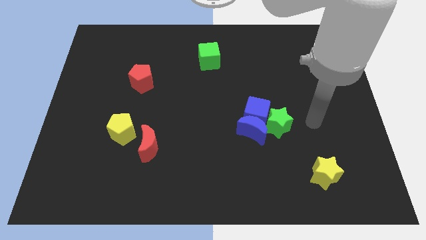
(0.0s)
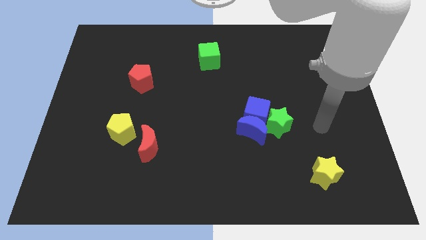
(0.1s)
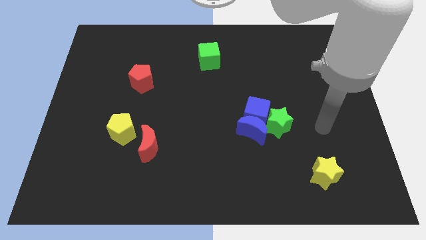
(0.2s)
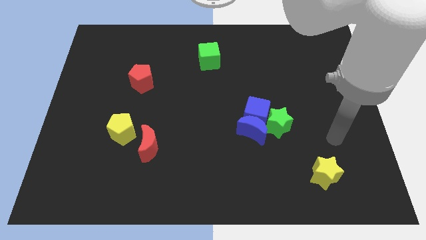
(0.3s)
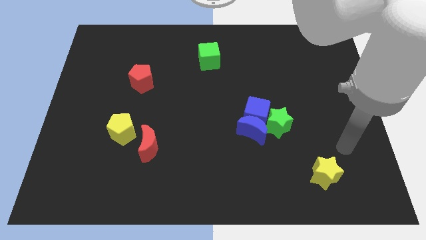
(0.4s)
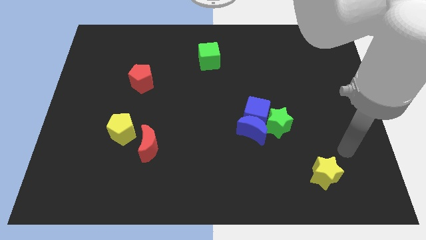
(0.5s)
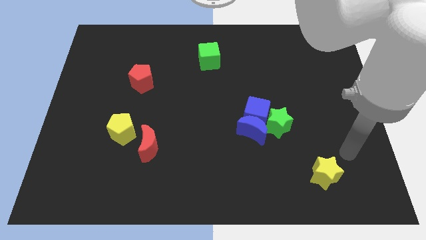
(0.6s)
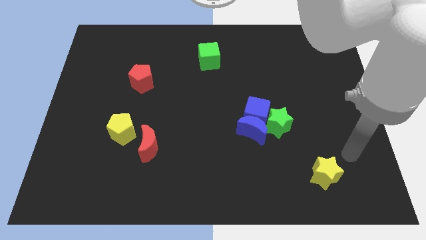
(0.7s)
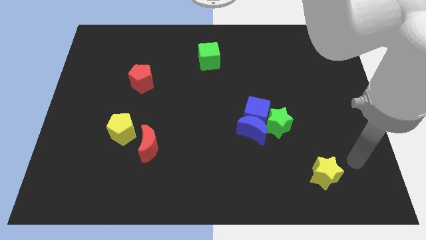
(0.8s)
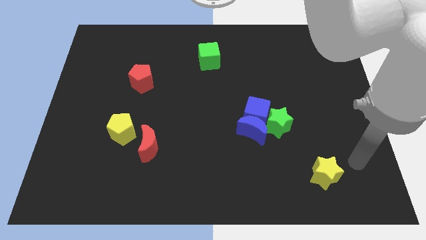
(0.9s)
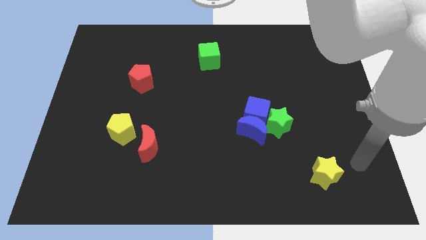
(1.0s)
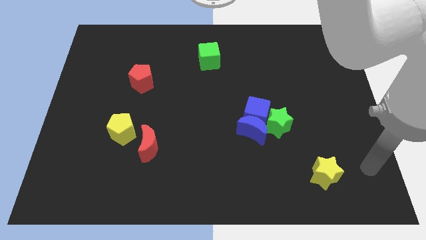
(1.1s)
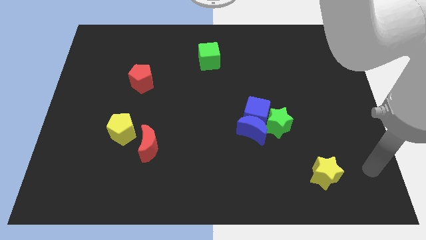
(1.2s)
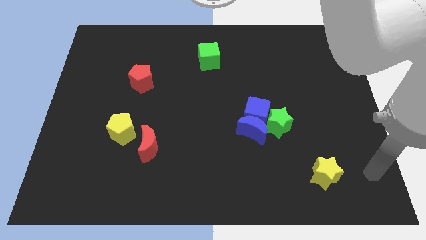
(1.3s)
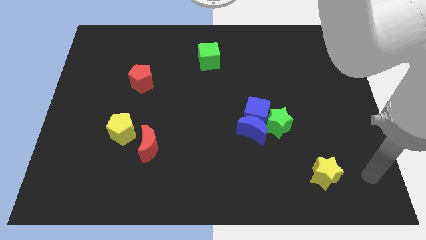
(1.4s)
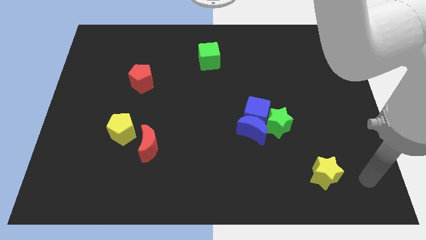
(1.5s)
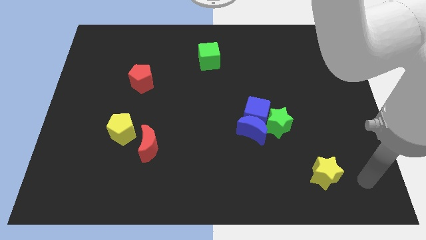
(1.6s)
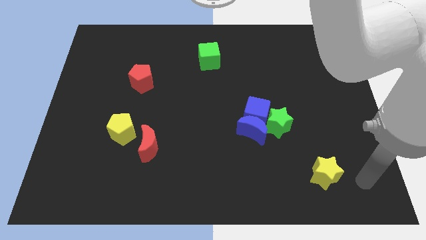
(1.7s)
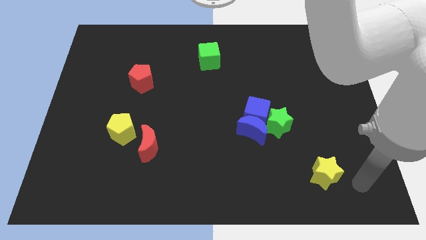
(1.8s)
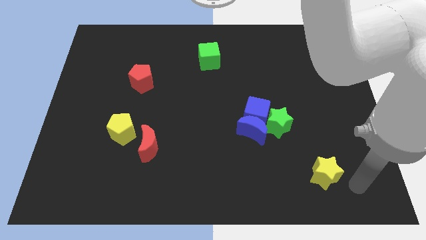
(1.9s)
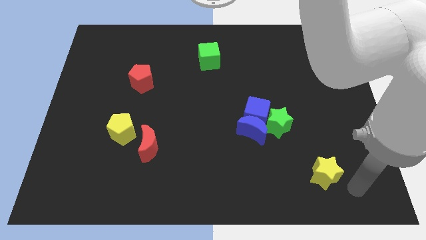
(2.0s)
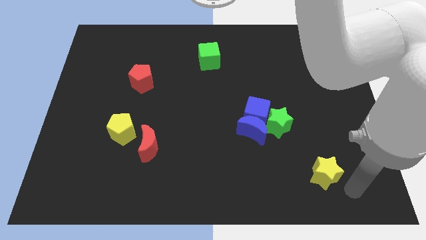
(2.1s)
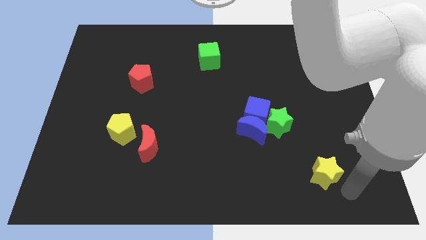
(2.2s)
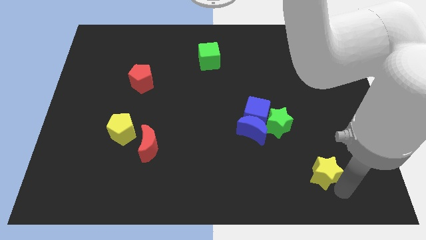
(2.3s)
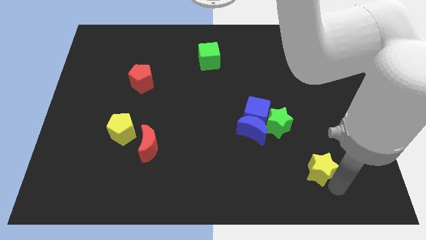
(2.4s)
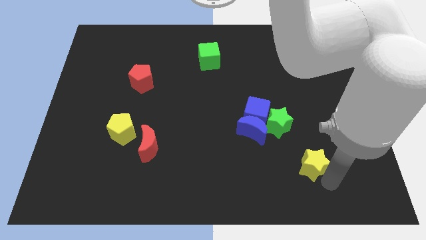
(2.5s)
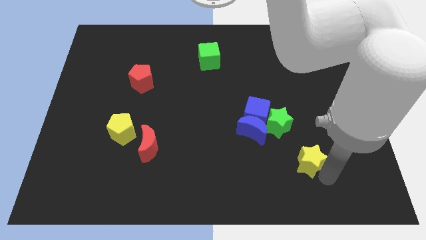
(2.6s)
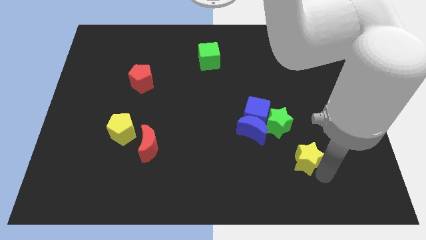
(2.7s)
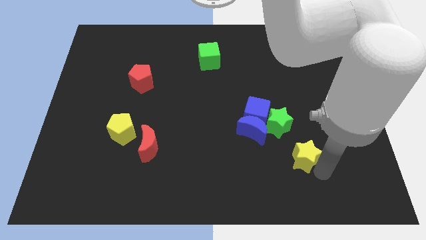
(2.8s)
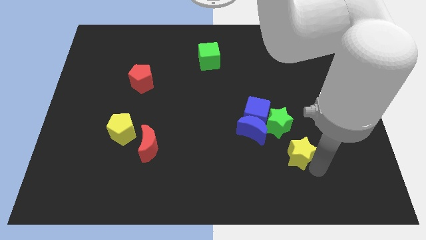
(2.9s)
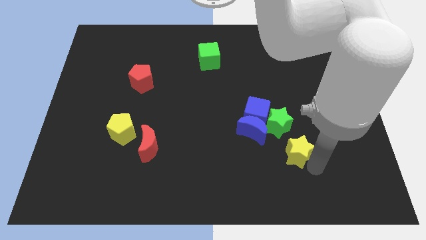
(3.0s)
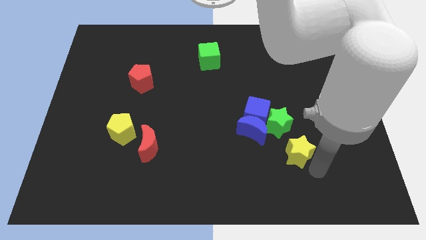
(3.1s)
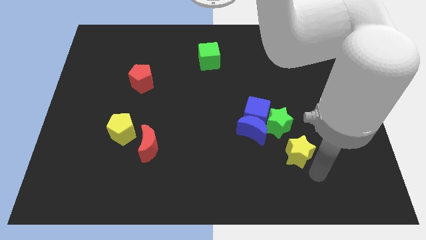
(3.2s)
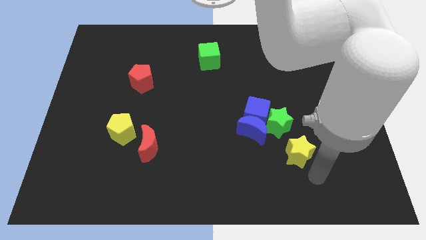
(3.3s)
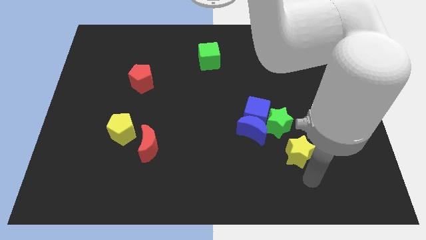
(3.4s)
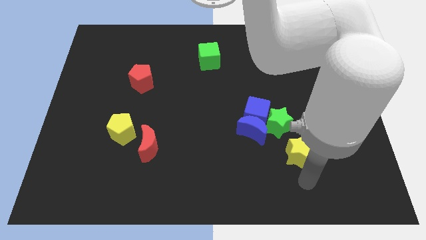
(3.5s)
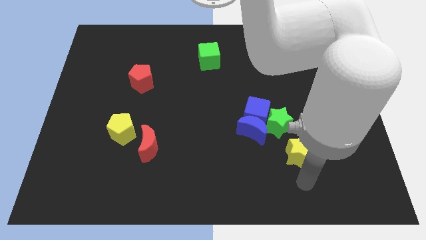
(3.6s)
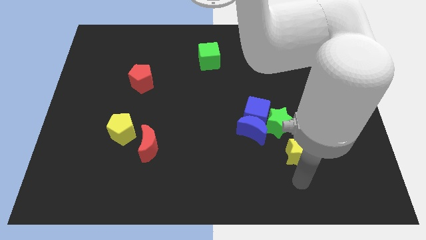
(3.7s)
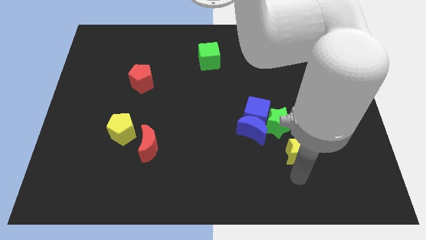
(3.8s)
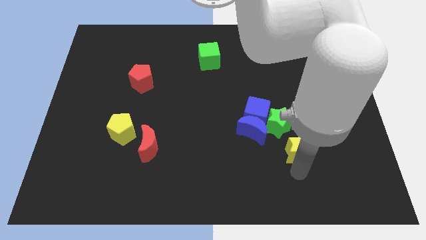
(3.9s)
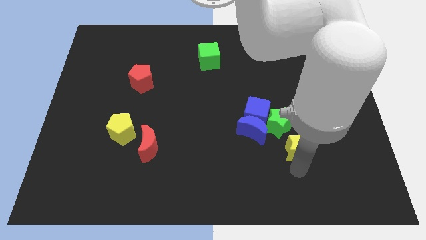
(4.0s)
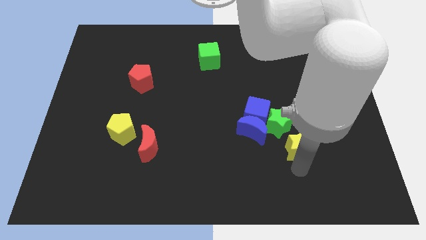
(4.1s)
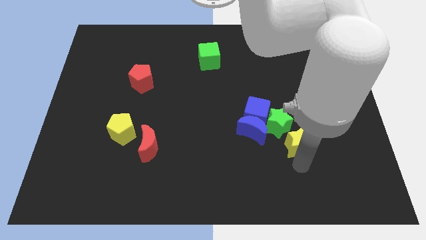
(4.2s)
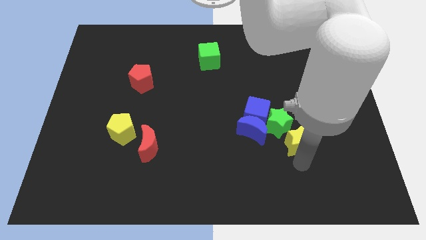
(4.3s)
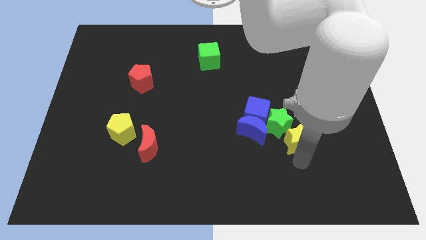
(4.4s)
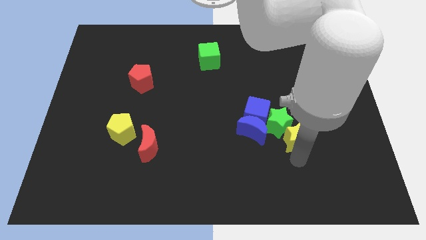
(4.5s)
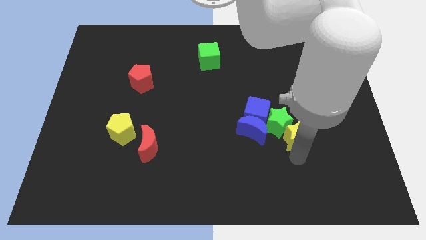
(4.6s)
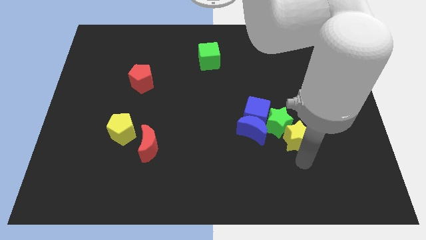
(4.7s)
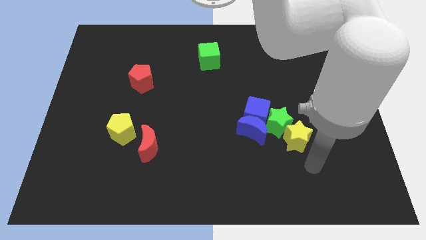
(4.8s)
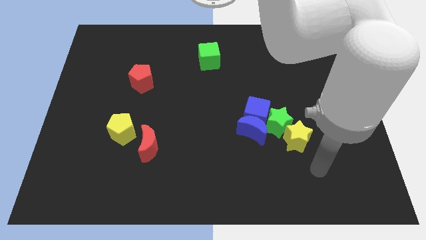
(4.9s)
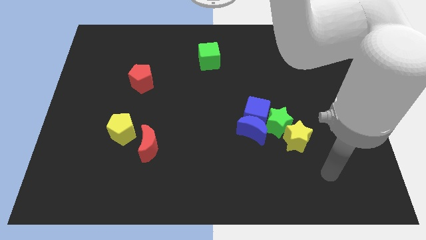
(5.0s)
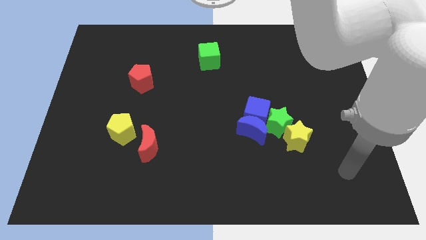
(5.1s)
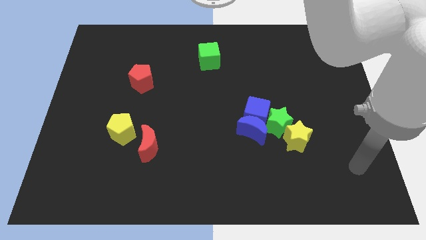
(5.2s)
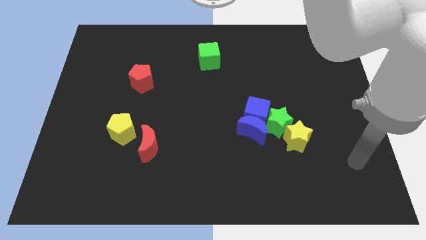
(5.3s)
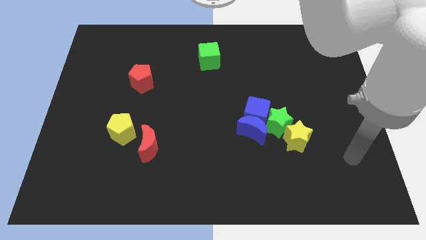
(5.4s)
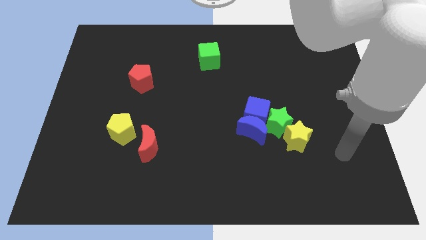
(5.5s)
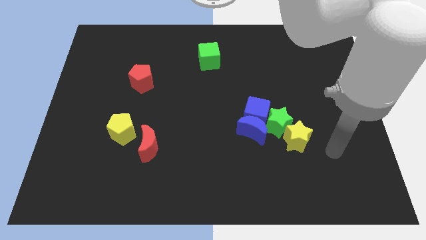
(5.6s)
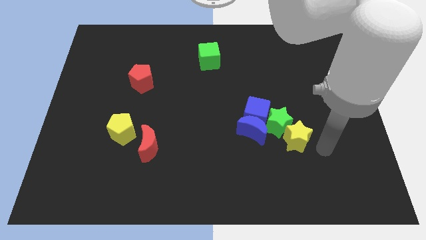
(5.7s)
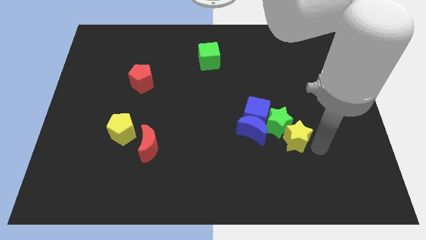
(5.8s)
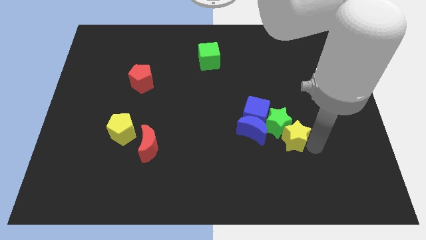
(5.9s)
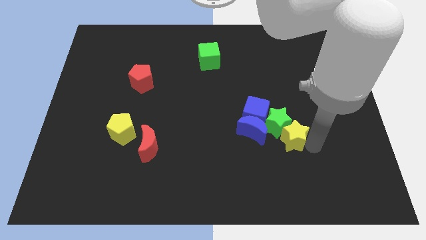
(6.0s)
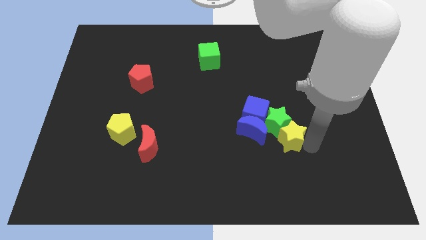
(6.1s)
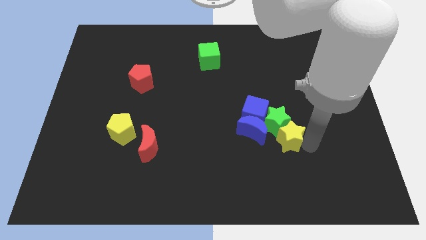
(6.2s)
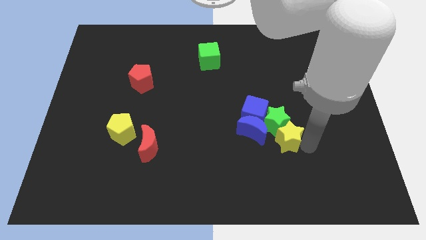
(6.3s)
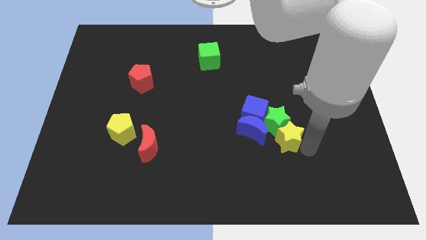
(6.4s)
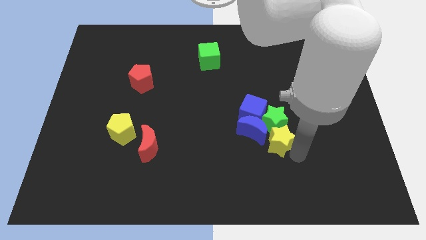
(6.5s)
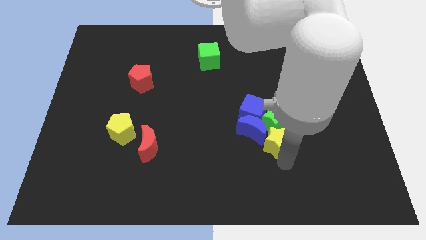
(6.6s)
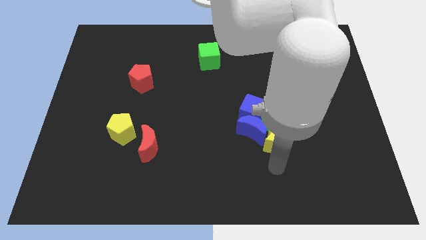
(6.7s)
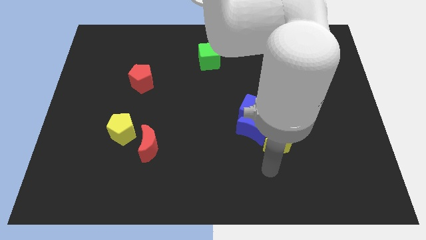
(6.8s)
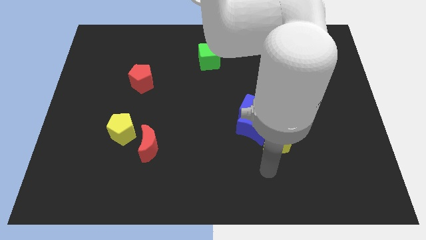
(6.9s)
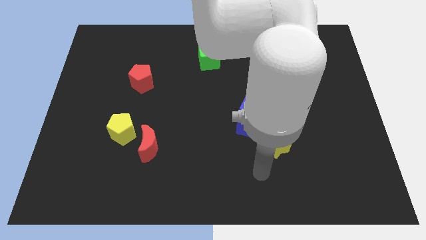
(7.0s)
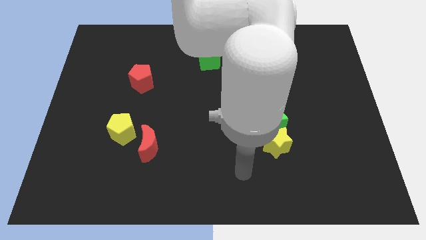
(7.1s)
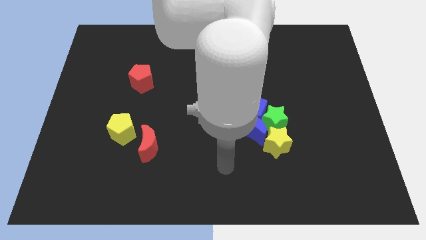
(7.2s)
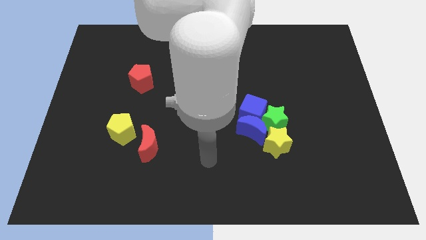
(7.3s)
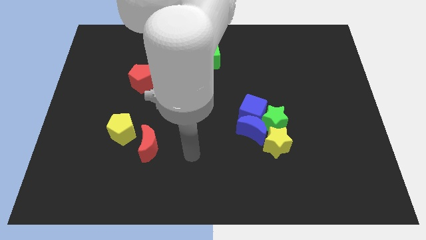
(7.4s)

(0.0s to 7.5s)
move the yellow star below the blue crescent

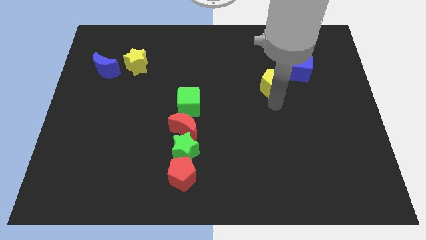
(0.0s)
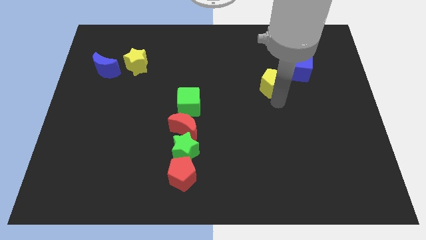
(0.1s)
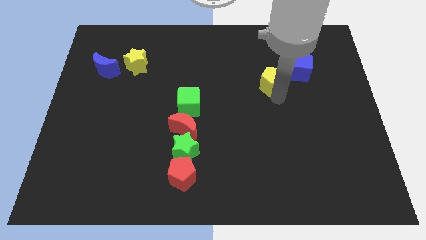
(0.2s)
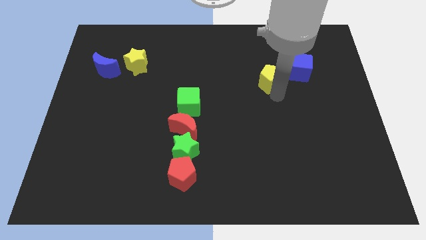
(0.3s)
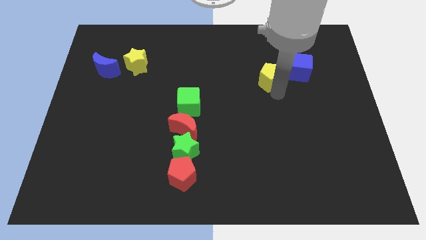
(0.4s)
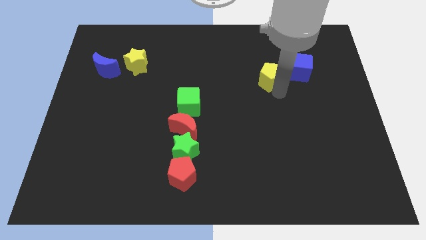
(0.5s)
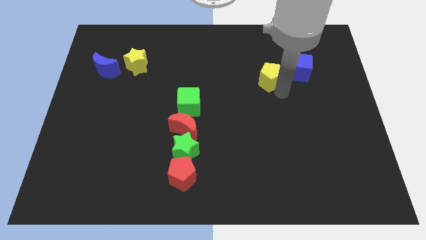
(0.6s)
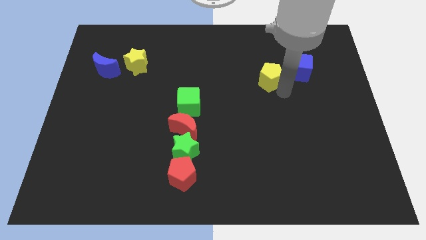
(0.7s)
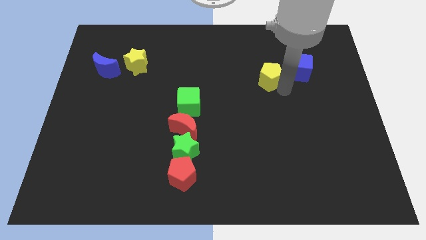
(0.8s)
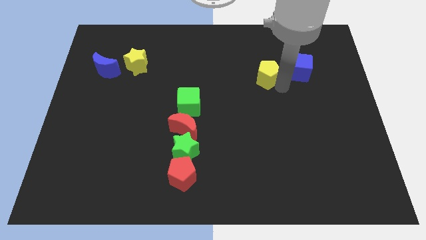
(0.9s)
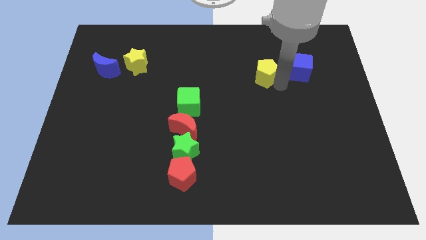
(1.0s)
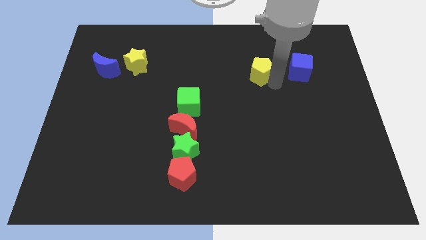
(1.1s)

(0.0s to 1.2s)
place the yellow pentagon left to the blue cube

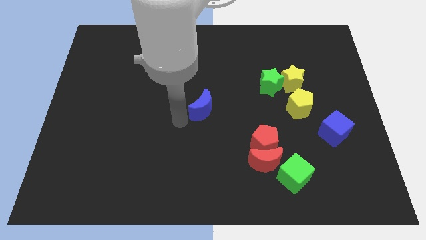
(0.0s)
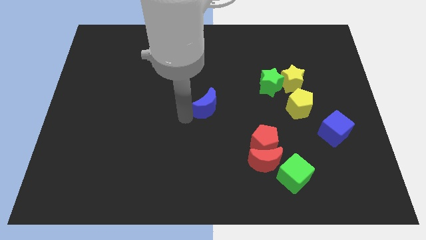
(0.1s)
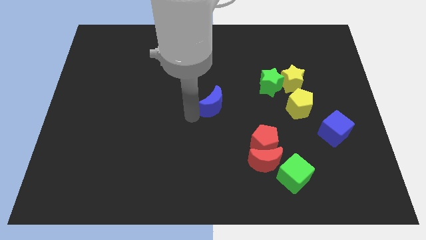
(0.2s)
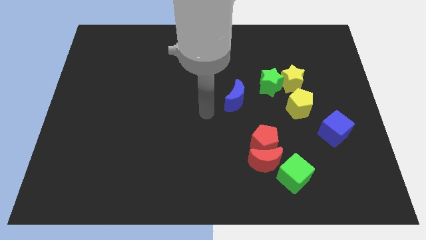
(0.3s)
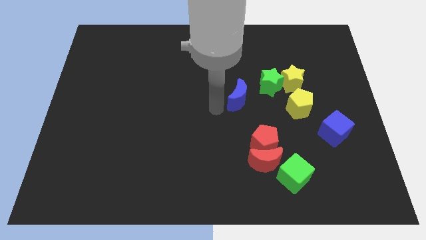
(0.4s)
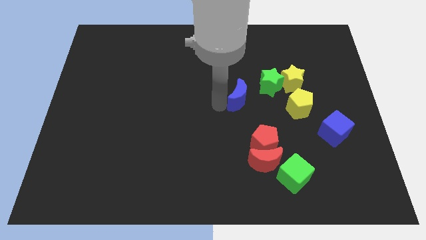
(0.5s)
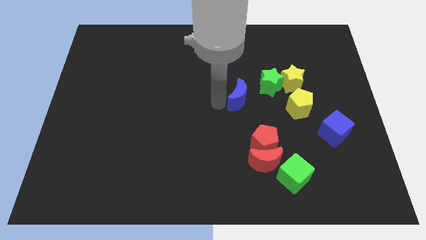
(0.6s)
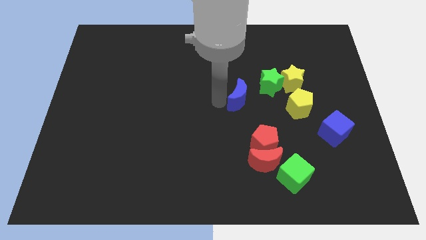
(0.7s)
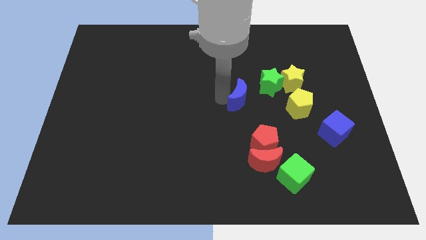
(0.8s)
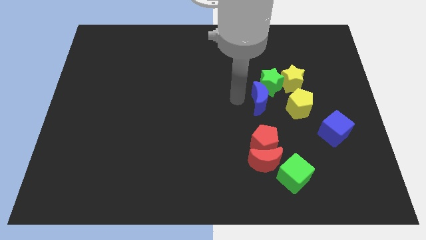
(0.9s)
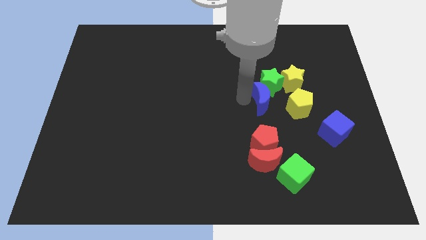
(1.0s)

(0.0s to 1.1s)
push blue moon into green star
